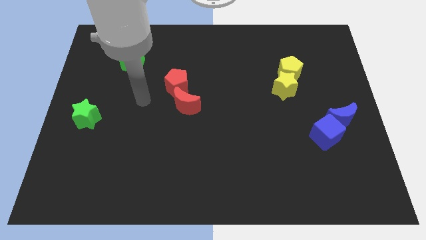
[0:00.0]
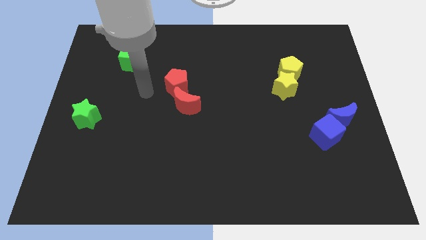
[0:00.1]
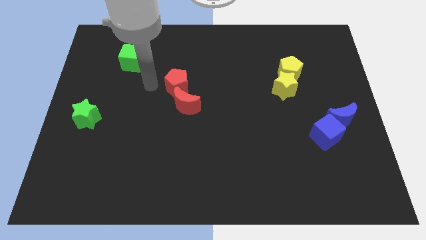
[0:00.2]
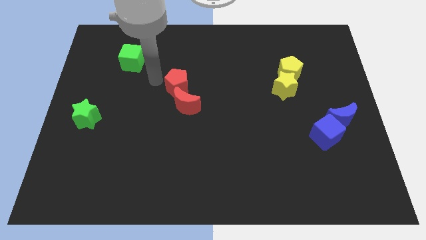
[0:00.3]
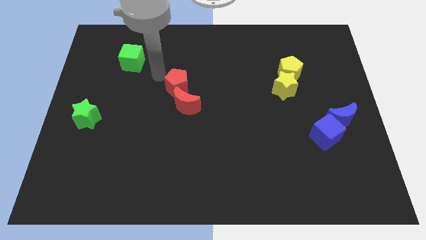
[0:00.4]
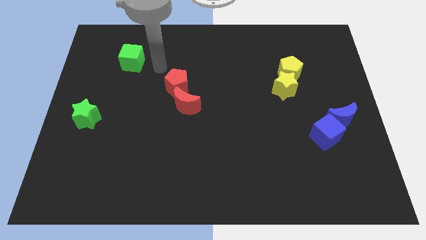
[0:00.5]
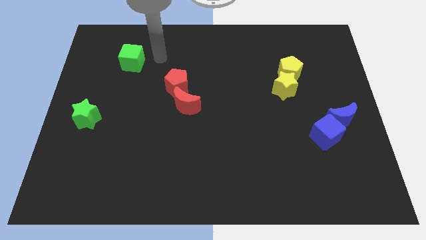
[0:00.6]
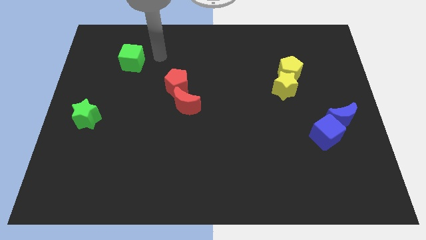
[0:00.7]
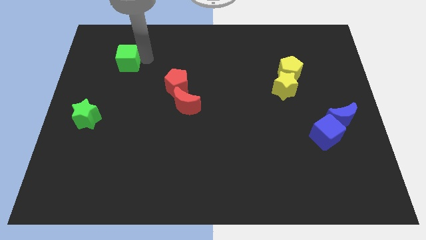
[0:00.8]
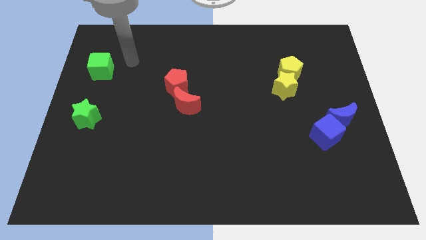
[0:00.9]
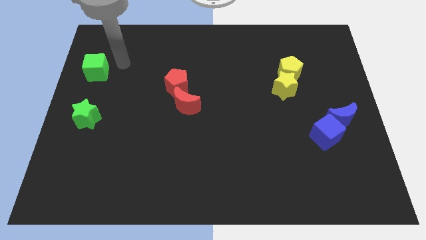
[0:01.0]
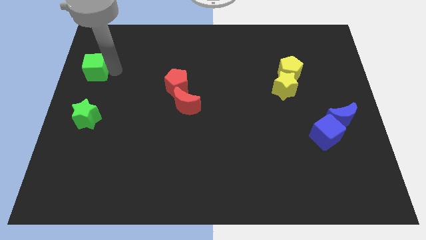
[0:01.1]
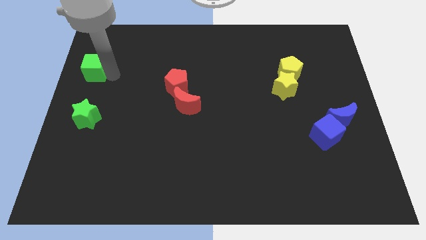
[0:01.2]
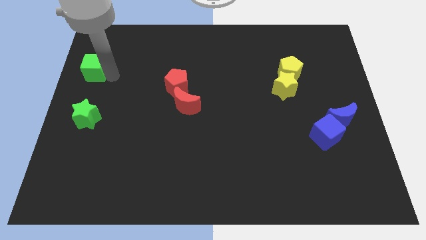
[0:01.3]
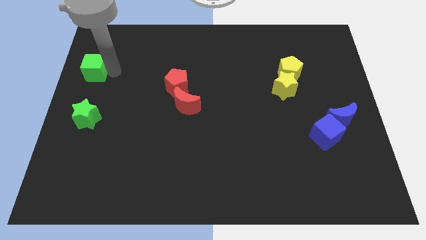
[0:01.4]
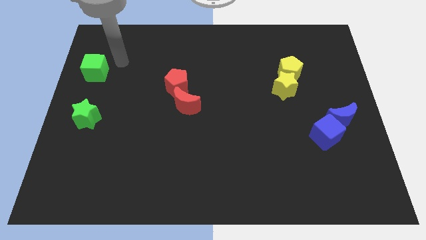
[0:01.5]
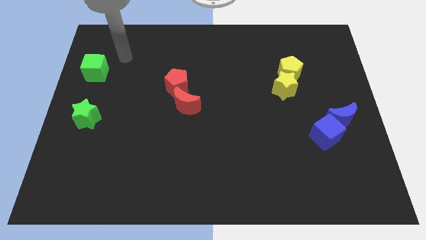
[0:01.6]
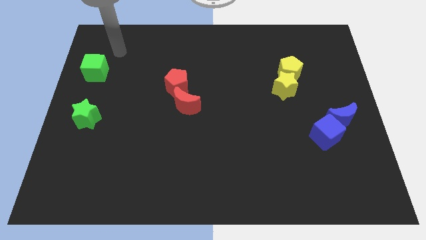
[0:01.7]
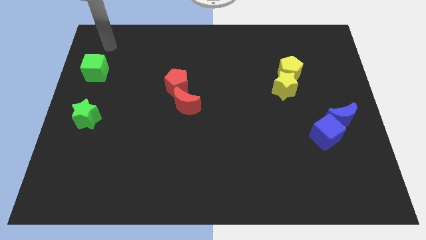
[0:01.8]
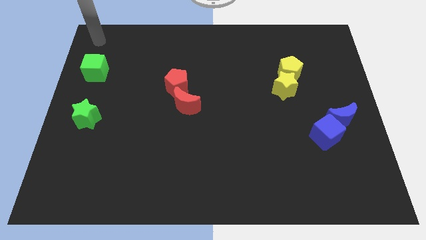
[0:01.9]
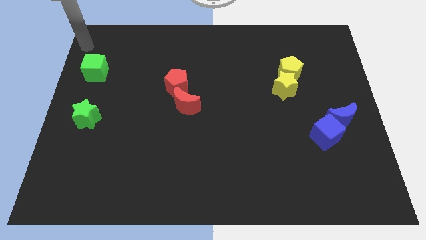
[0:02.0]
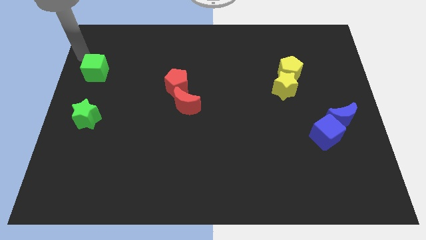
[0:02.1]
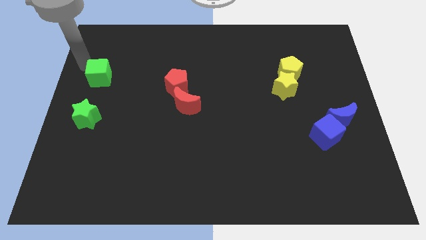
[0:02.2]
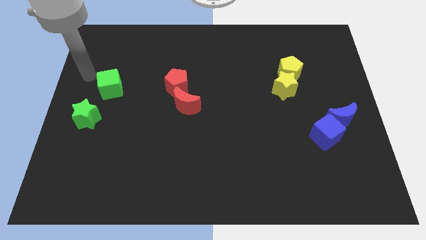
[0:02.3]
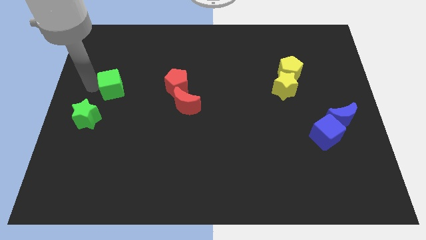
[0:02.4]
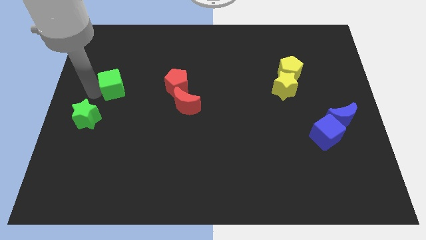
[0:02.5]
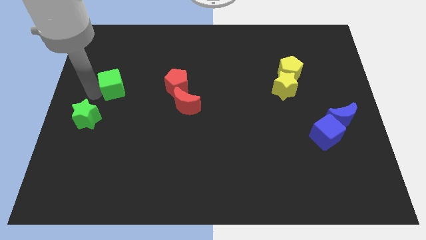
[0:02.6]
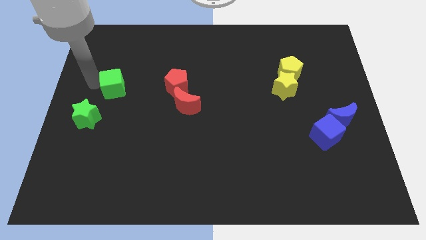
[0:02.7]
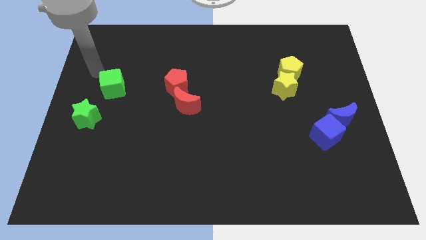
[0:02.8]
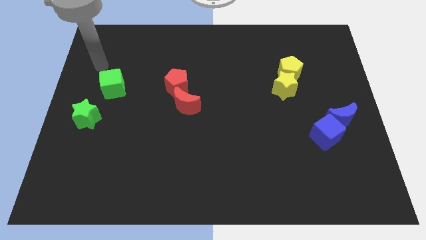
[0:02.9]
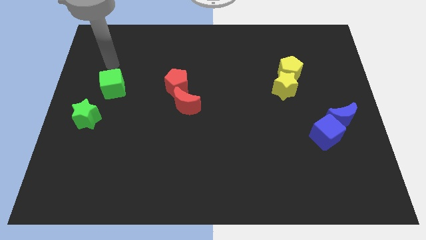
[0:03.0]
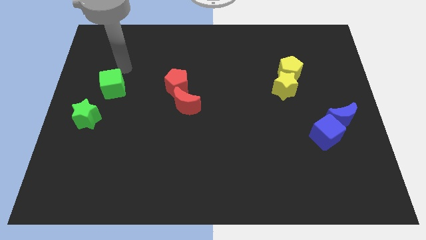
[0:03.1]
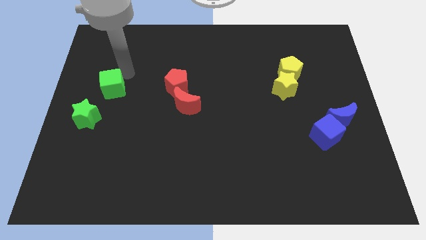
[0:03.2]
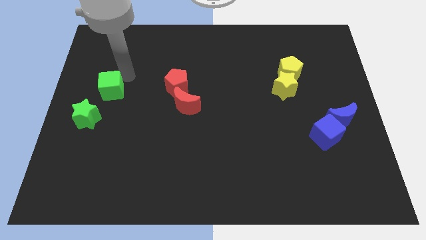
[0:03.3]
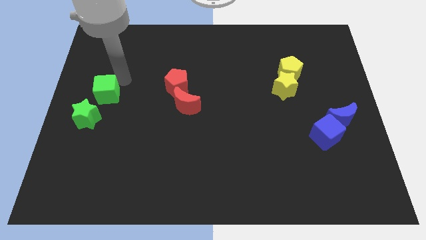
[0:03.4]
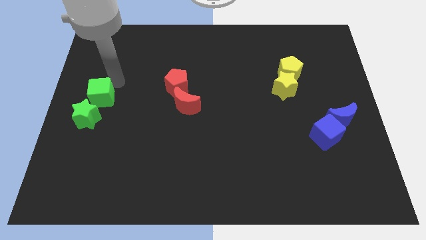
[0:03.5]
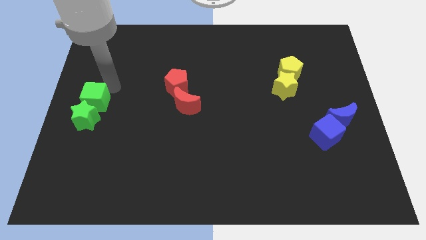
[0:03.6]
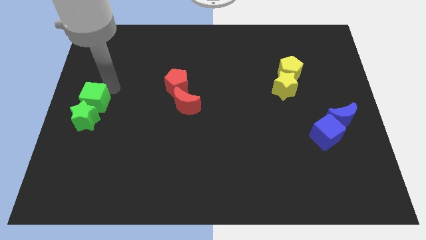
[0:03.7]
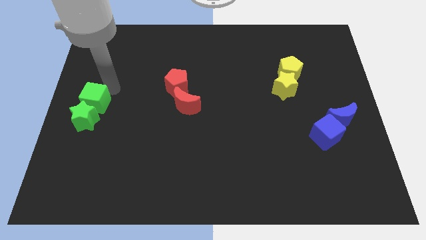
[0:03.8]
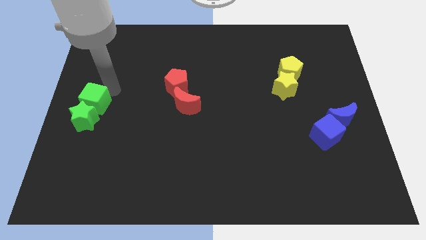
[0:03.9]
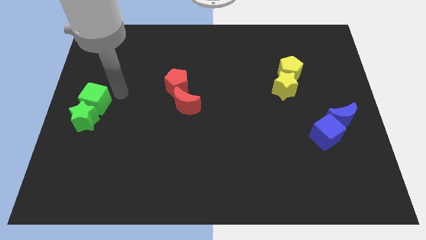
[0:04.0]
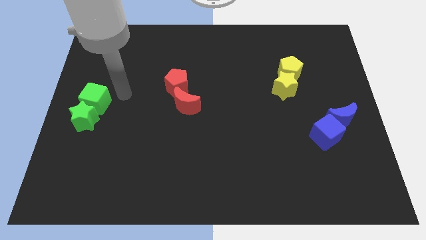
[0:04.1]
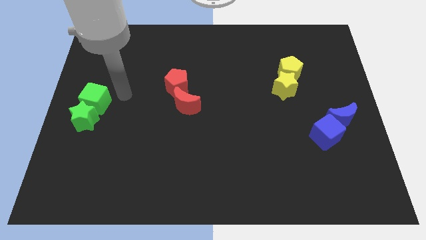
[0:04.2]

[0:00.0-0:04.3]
move the green cube into the green star

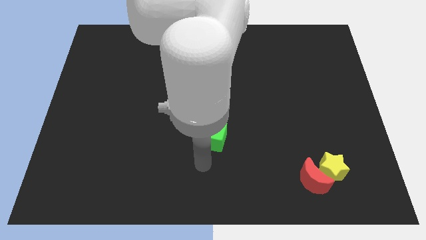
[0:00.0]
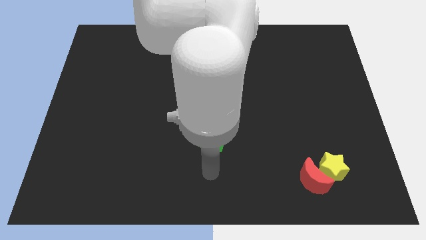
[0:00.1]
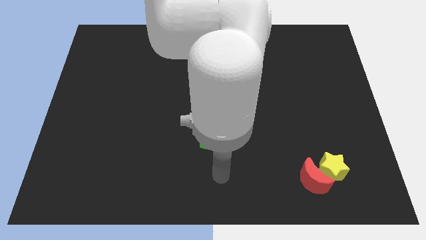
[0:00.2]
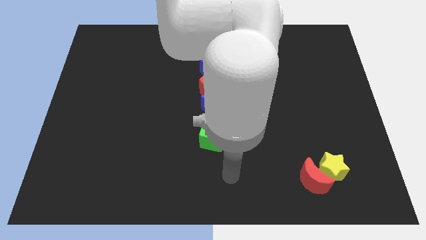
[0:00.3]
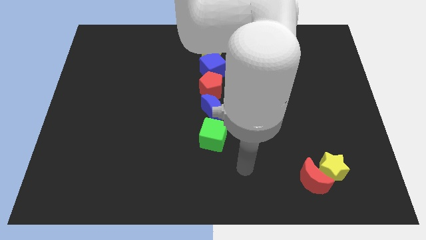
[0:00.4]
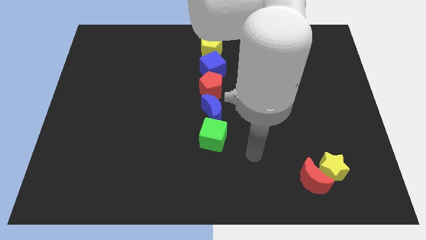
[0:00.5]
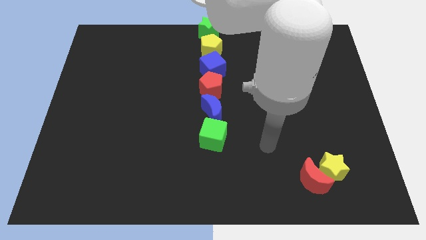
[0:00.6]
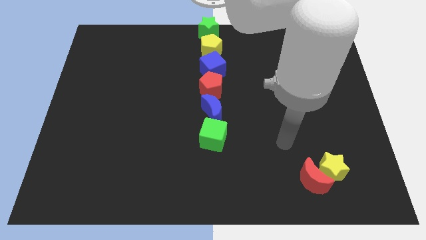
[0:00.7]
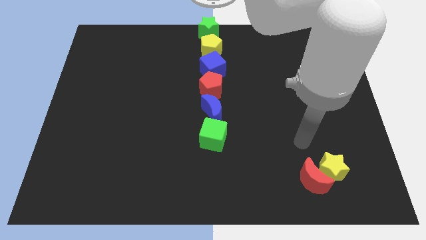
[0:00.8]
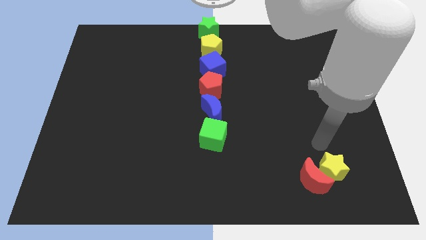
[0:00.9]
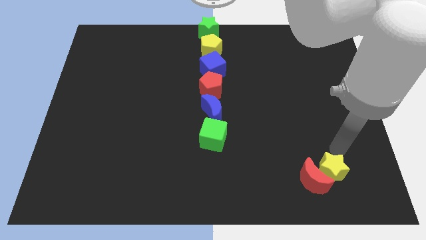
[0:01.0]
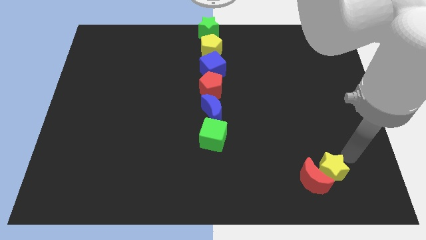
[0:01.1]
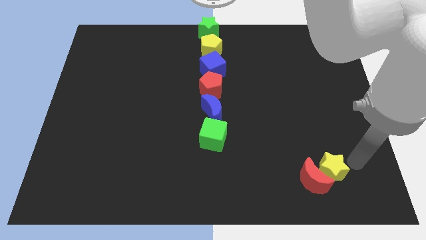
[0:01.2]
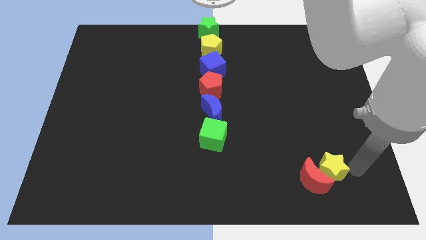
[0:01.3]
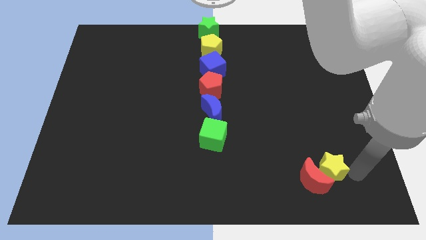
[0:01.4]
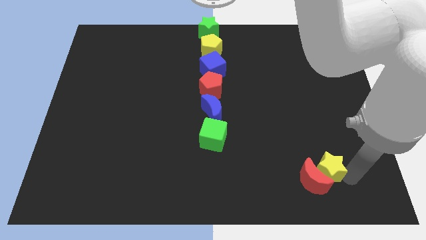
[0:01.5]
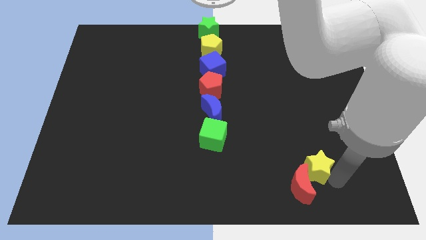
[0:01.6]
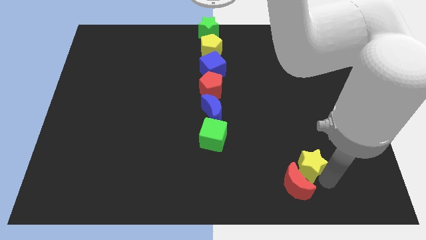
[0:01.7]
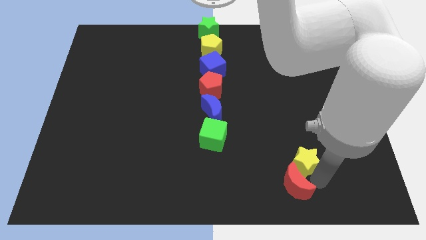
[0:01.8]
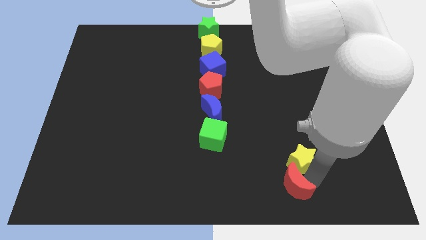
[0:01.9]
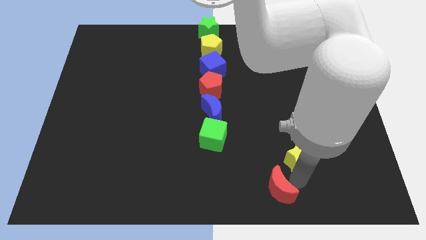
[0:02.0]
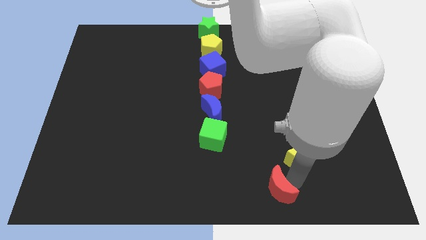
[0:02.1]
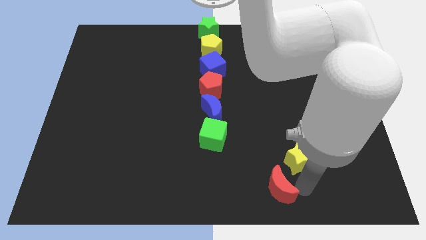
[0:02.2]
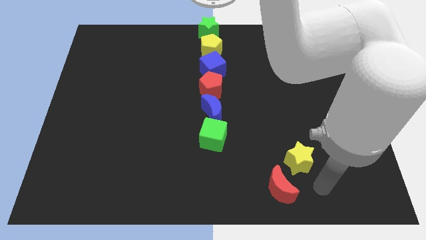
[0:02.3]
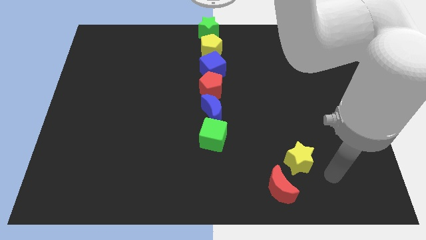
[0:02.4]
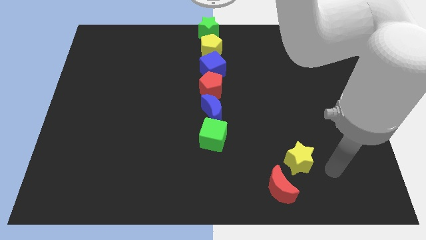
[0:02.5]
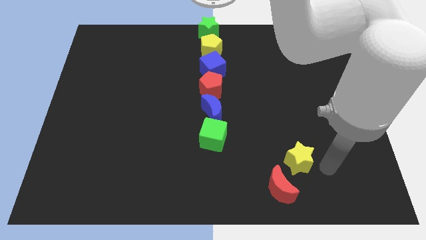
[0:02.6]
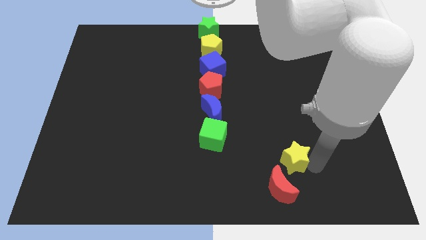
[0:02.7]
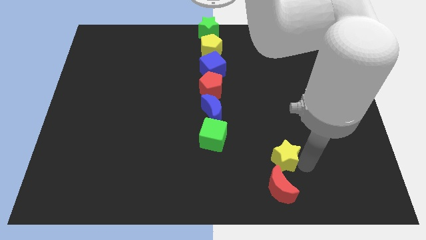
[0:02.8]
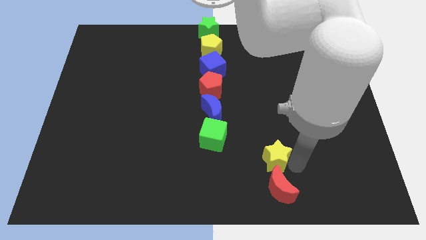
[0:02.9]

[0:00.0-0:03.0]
move the yellow star to the top of the red crescent

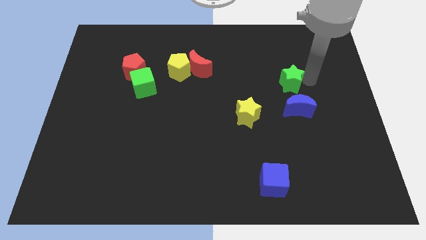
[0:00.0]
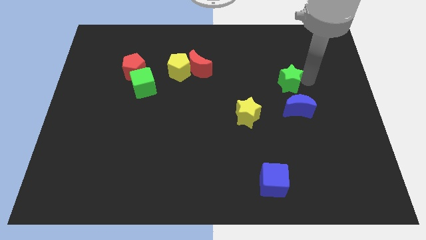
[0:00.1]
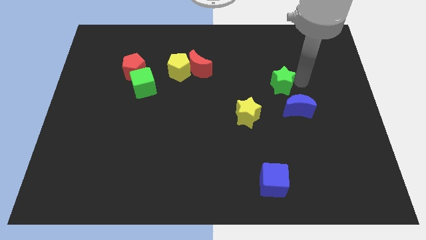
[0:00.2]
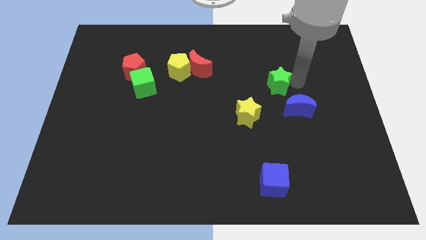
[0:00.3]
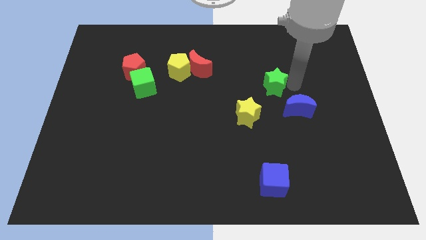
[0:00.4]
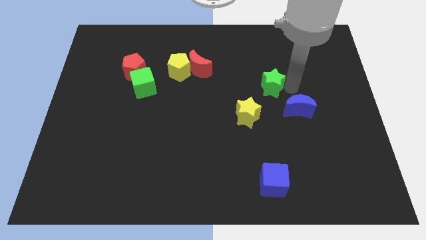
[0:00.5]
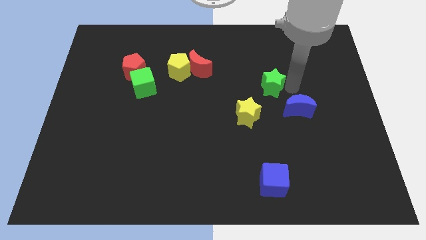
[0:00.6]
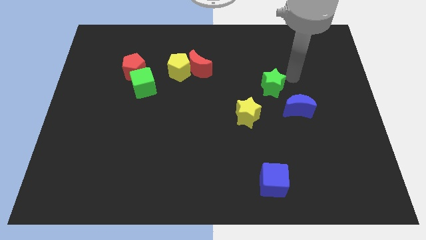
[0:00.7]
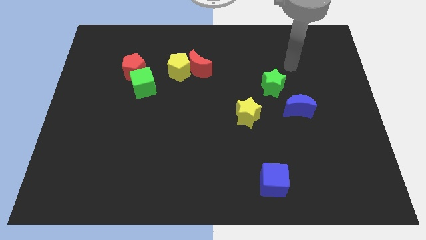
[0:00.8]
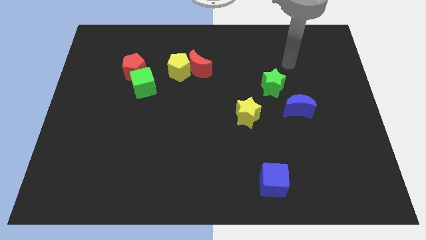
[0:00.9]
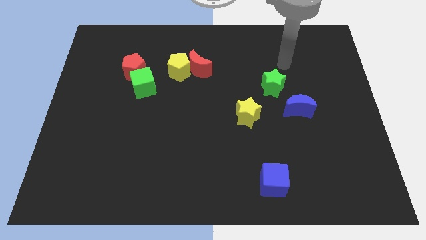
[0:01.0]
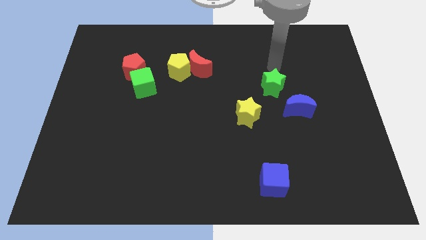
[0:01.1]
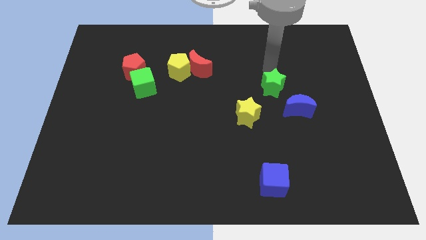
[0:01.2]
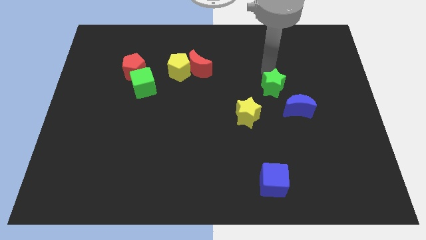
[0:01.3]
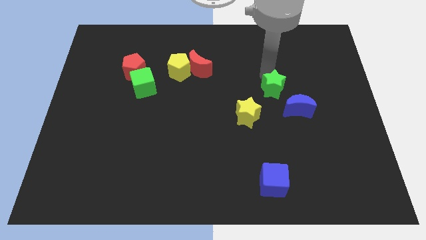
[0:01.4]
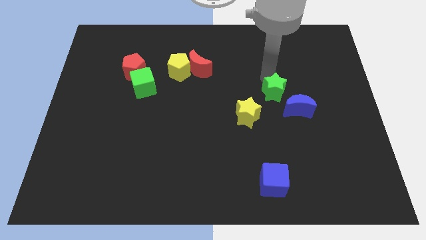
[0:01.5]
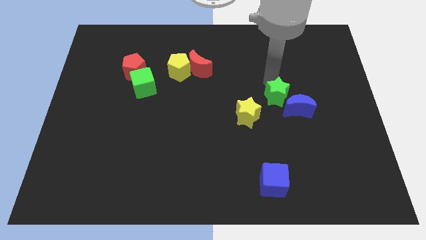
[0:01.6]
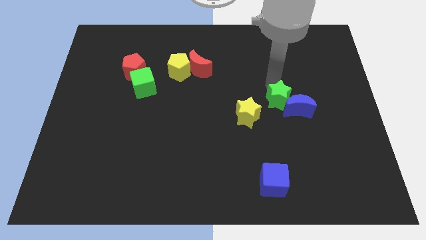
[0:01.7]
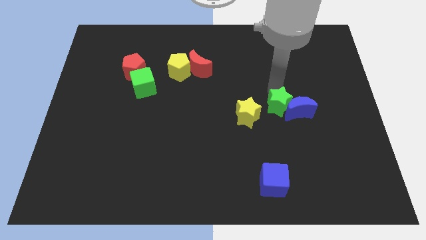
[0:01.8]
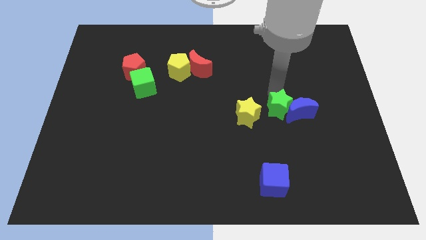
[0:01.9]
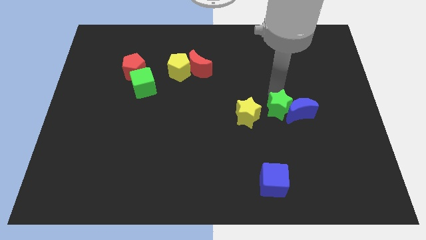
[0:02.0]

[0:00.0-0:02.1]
move the green star into the blue crescent
